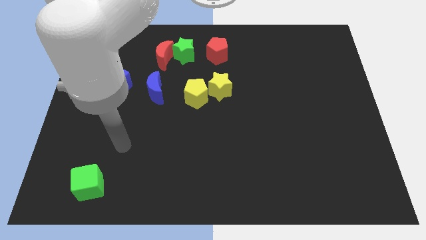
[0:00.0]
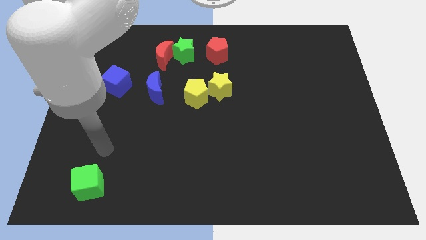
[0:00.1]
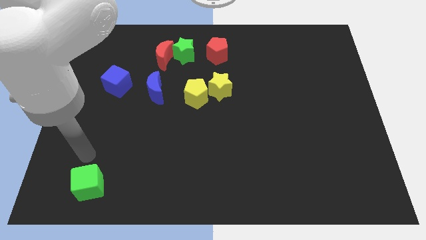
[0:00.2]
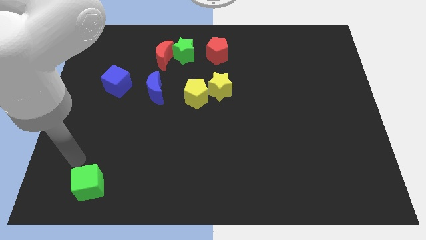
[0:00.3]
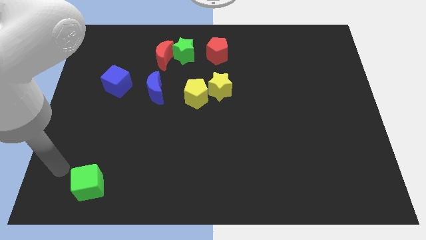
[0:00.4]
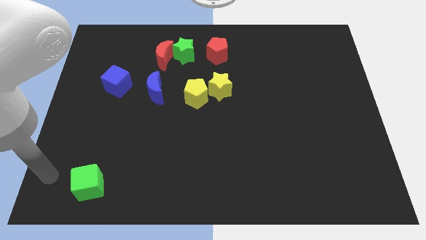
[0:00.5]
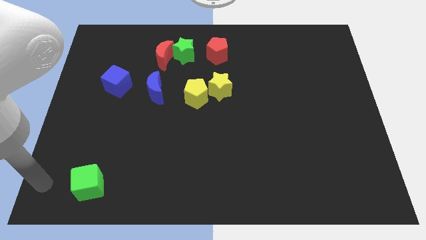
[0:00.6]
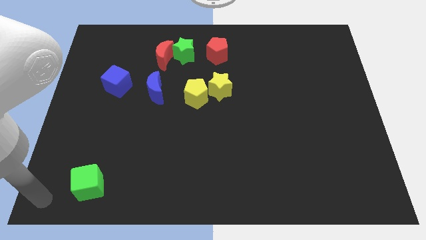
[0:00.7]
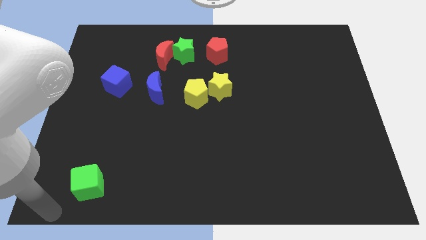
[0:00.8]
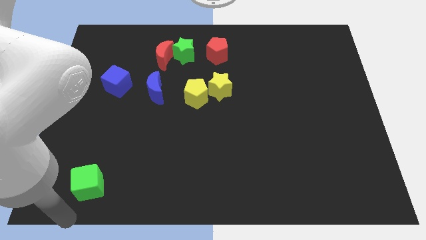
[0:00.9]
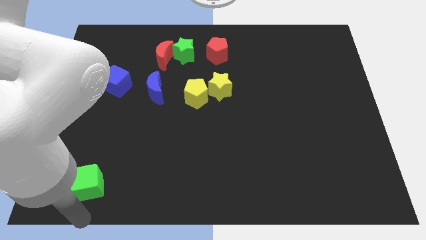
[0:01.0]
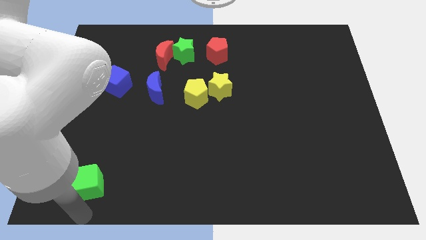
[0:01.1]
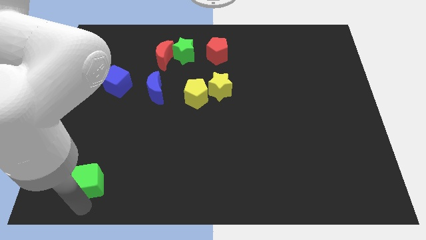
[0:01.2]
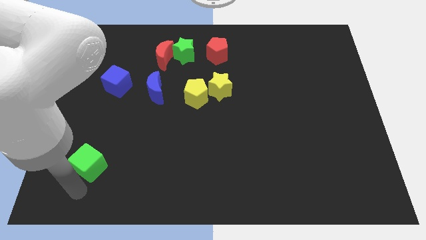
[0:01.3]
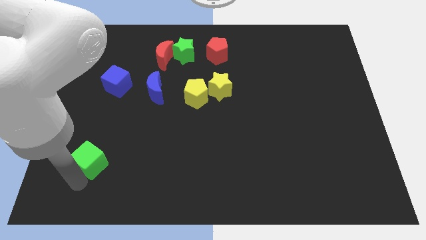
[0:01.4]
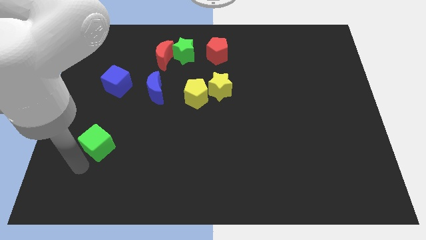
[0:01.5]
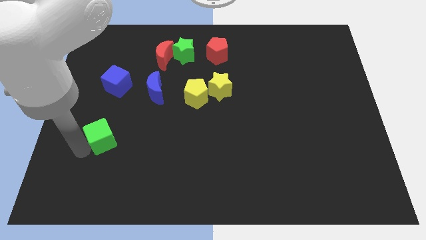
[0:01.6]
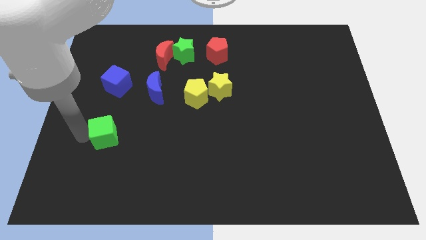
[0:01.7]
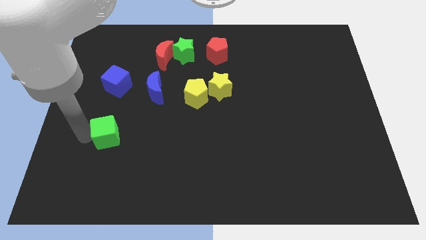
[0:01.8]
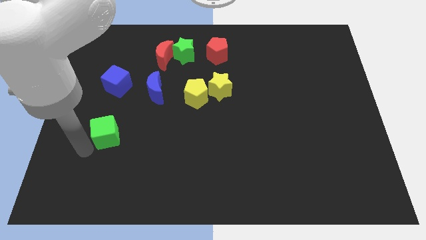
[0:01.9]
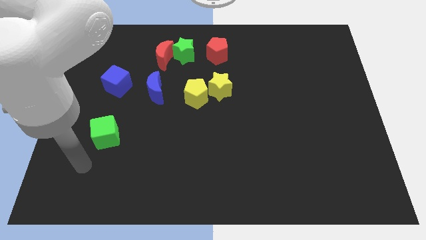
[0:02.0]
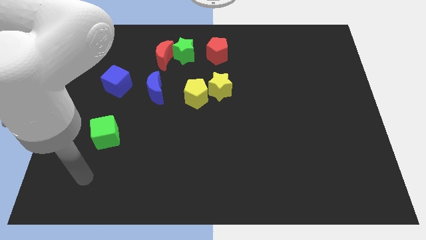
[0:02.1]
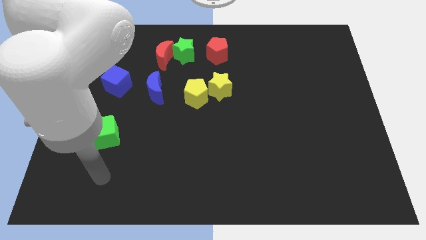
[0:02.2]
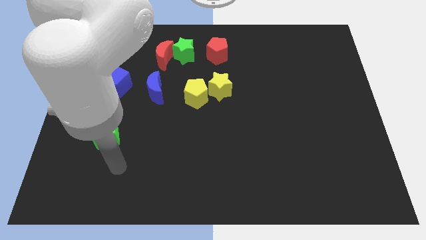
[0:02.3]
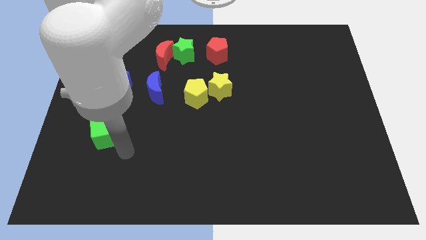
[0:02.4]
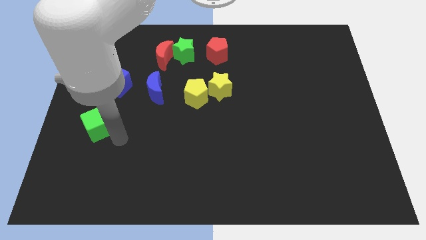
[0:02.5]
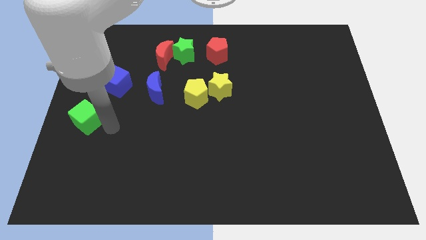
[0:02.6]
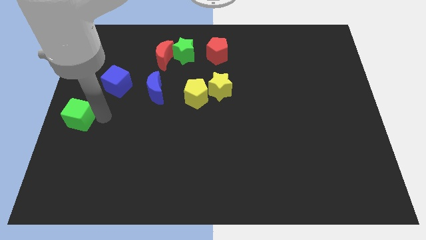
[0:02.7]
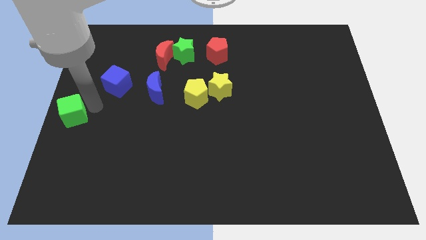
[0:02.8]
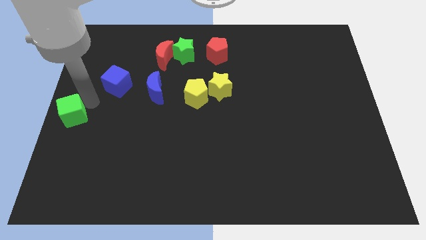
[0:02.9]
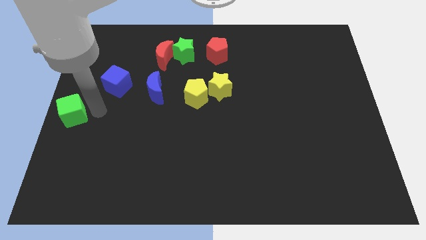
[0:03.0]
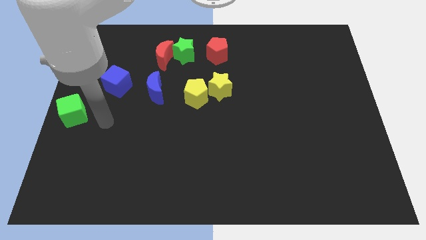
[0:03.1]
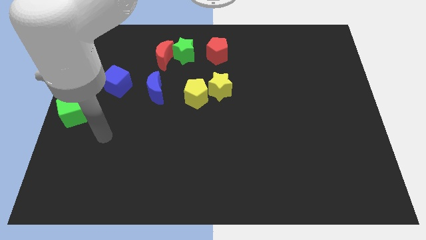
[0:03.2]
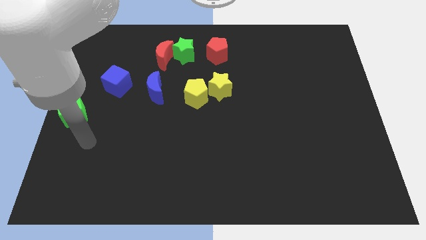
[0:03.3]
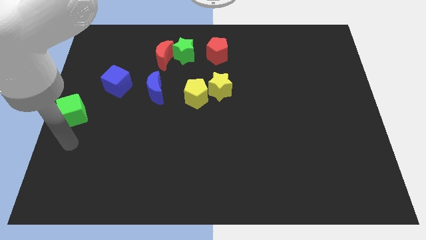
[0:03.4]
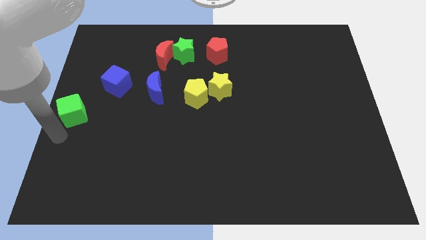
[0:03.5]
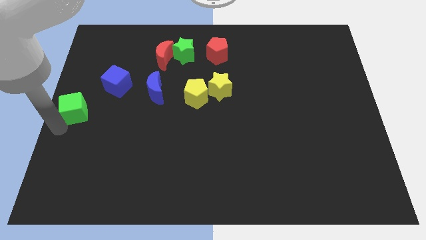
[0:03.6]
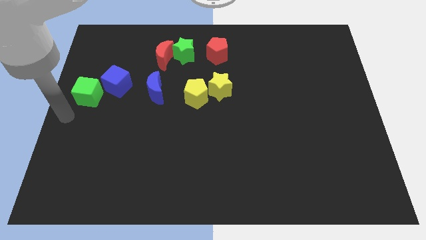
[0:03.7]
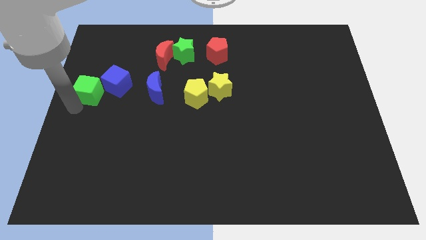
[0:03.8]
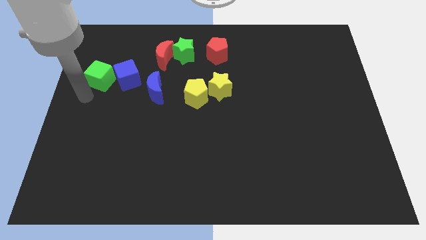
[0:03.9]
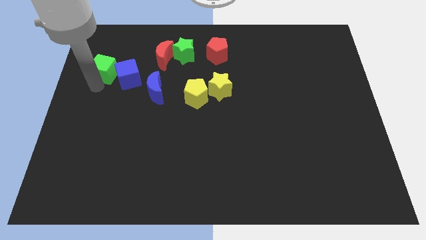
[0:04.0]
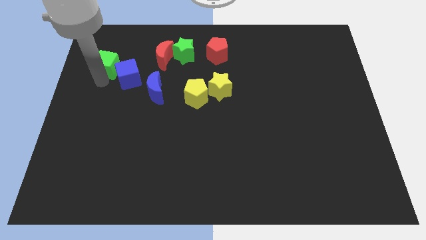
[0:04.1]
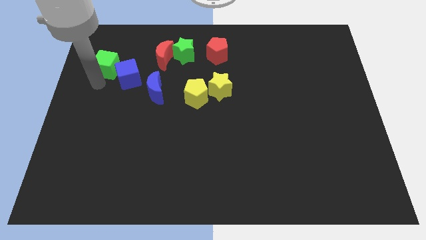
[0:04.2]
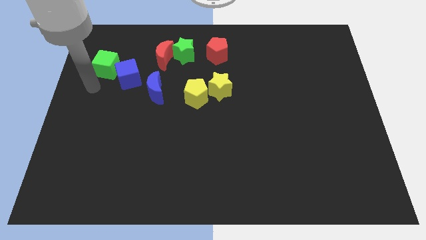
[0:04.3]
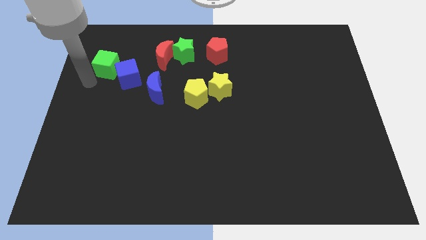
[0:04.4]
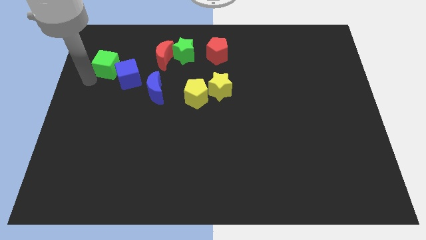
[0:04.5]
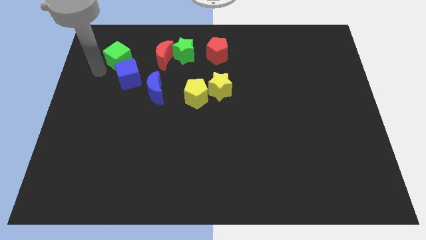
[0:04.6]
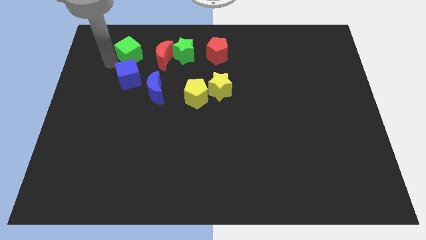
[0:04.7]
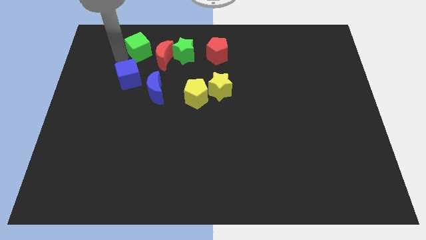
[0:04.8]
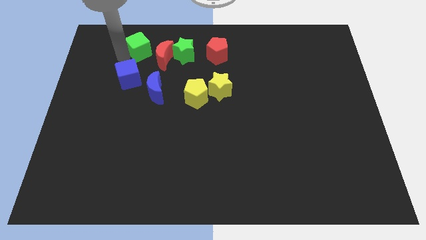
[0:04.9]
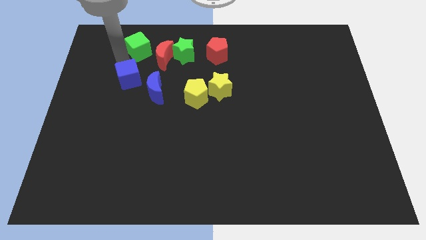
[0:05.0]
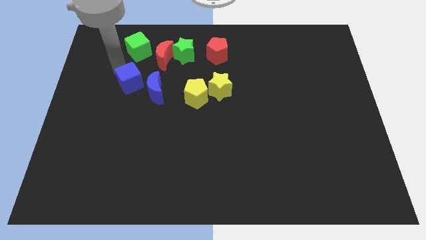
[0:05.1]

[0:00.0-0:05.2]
place the green cube above the blue cube

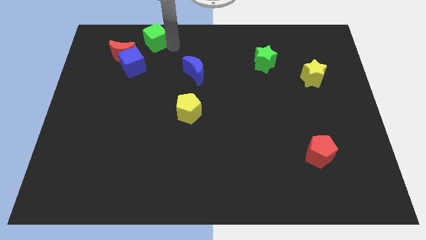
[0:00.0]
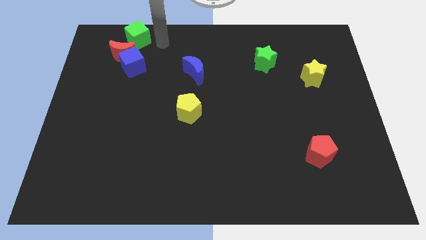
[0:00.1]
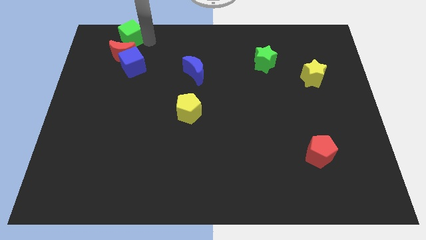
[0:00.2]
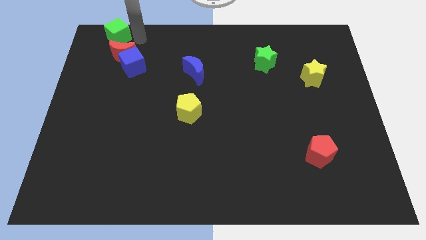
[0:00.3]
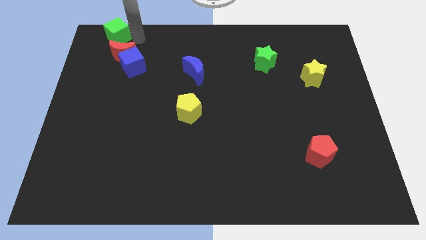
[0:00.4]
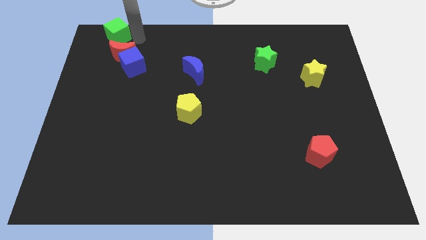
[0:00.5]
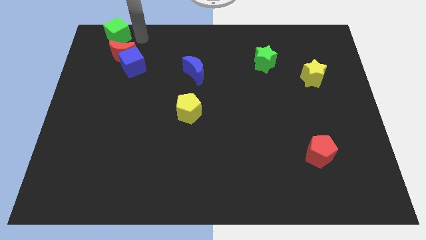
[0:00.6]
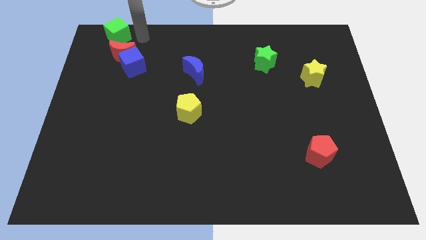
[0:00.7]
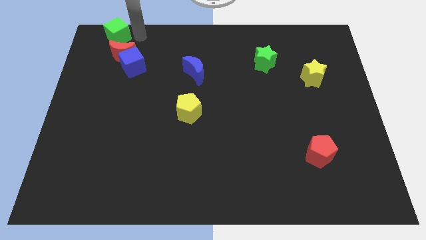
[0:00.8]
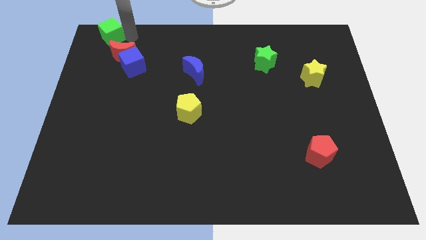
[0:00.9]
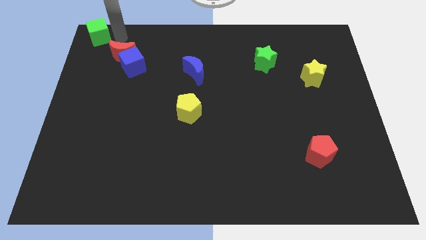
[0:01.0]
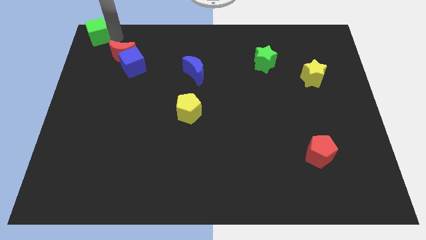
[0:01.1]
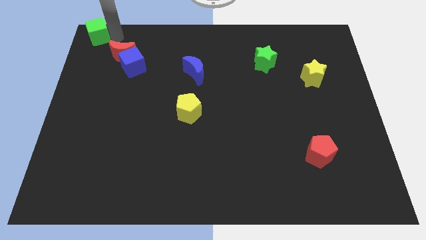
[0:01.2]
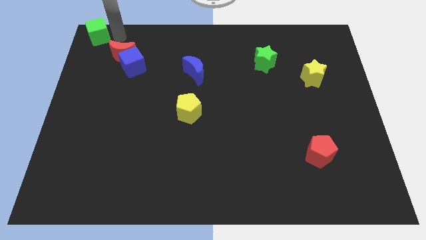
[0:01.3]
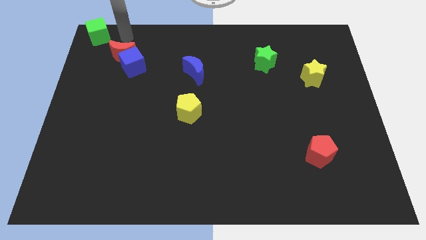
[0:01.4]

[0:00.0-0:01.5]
place the green cube on top left of the board

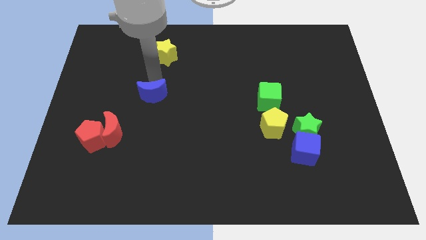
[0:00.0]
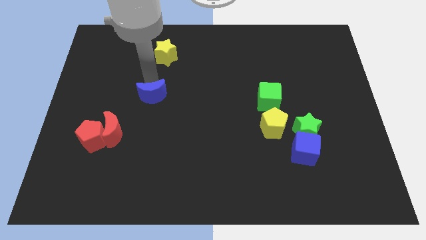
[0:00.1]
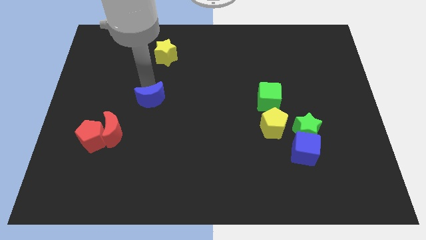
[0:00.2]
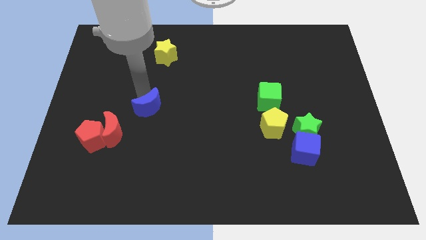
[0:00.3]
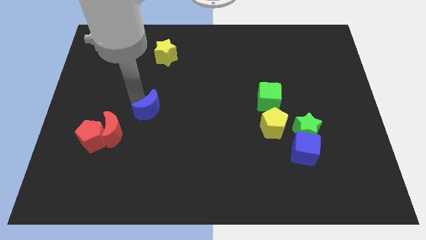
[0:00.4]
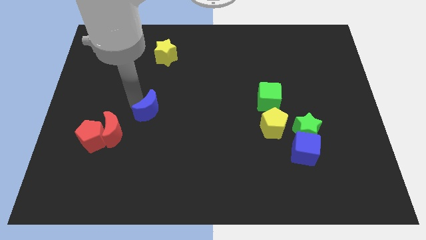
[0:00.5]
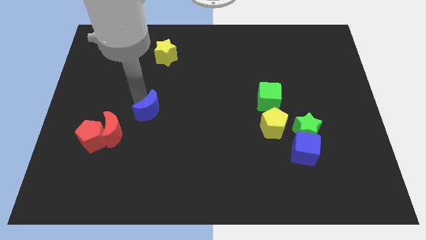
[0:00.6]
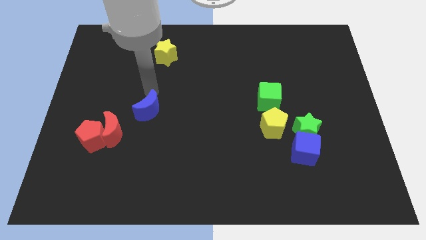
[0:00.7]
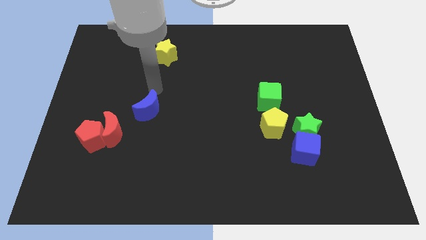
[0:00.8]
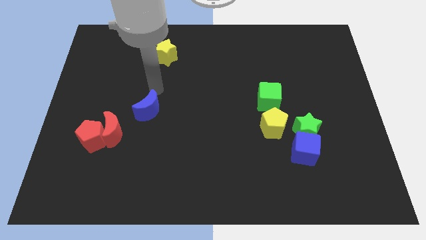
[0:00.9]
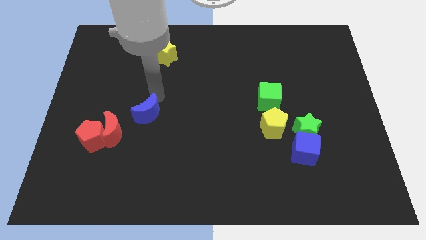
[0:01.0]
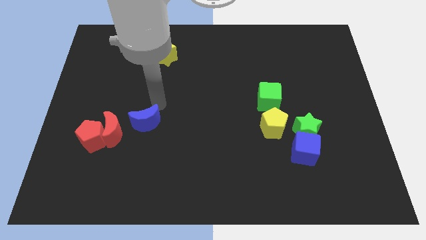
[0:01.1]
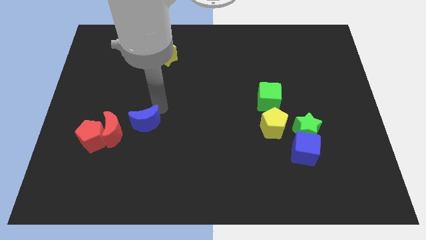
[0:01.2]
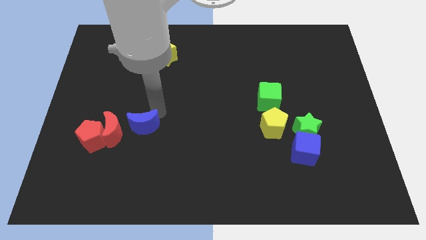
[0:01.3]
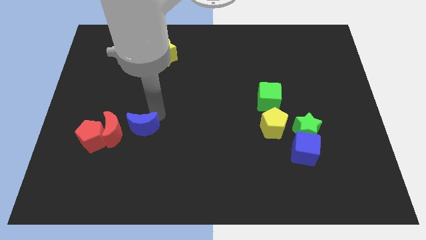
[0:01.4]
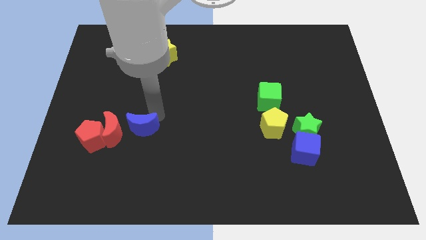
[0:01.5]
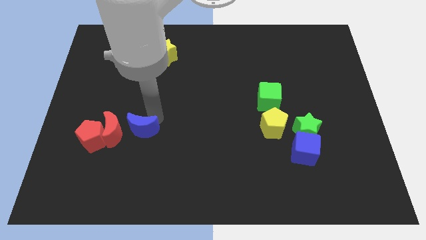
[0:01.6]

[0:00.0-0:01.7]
push the blue crescent to the right of the red crescent

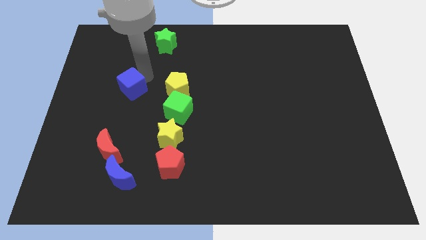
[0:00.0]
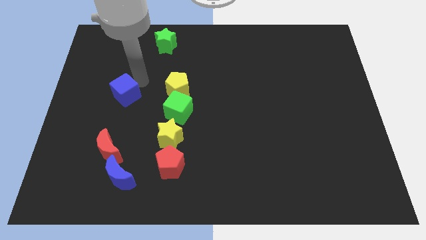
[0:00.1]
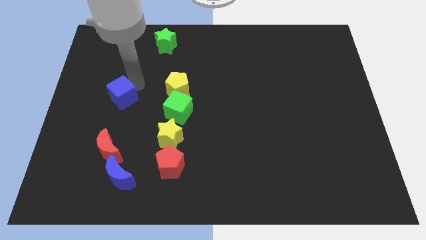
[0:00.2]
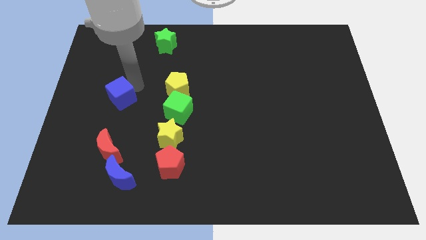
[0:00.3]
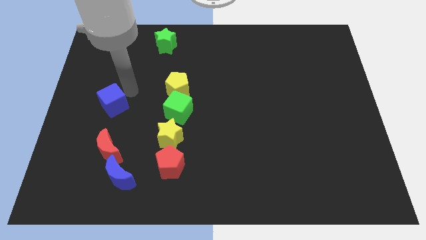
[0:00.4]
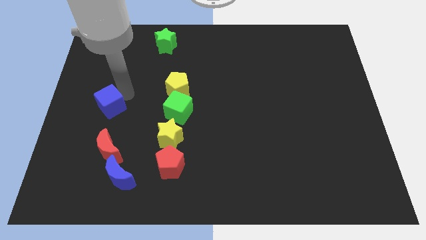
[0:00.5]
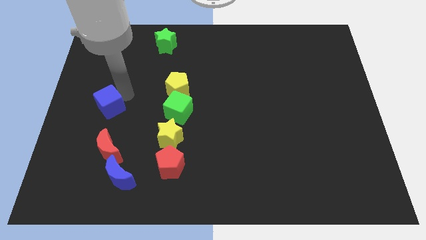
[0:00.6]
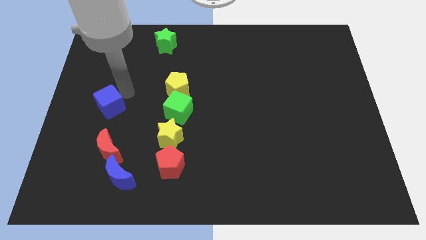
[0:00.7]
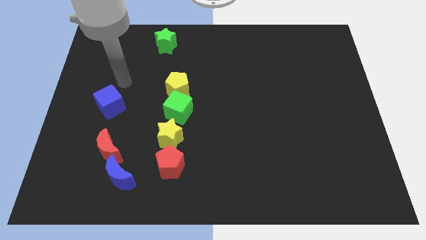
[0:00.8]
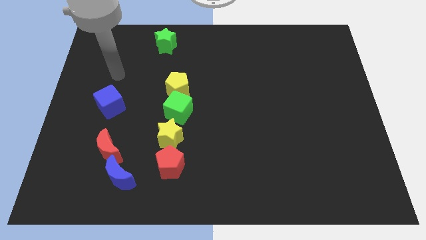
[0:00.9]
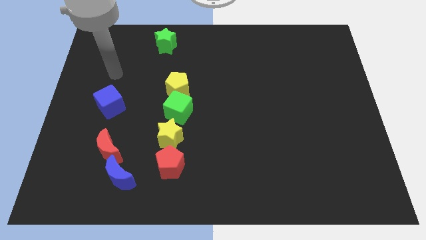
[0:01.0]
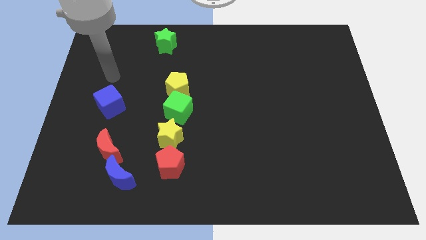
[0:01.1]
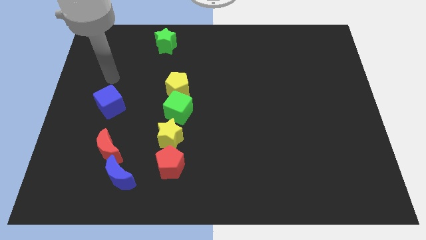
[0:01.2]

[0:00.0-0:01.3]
put the blue cube vertically above the red moon
